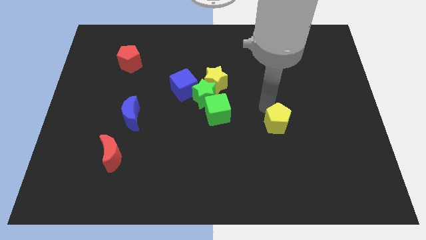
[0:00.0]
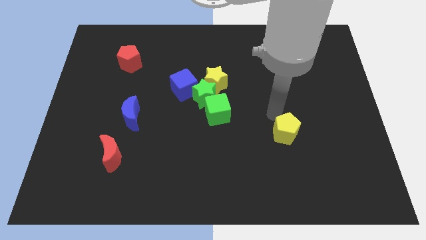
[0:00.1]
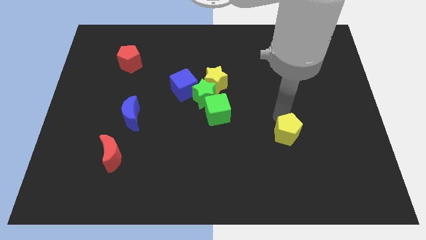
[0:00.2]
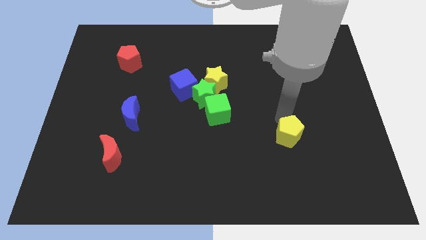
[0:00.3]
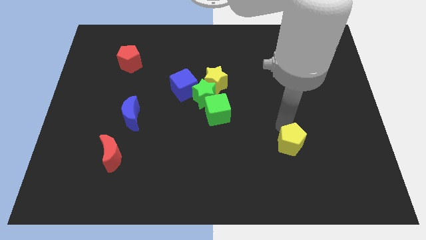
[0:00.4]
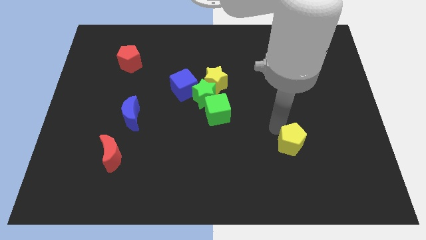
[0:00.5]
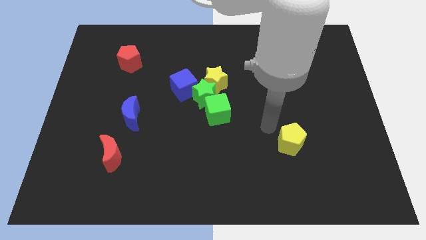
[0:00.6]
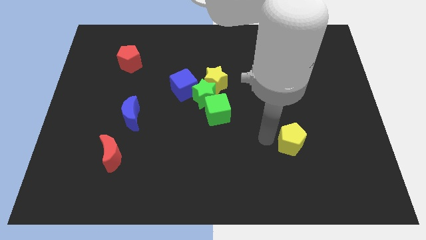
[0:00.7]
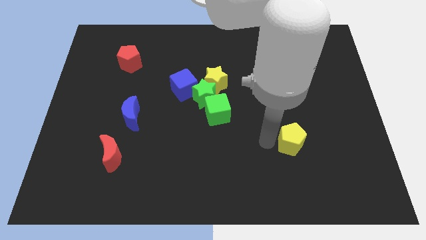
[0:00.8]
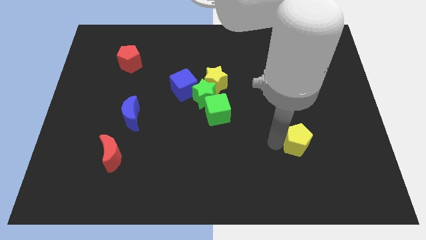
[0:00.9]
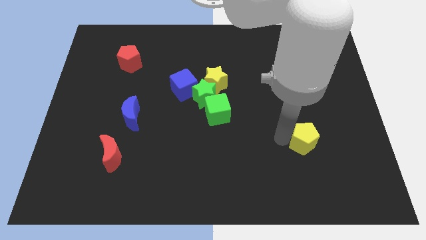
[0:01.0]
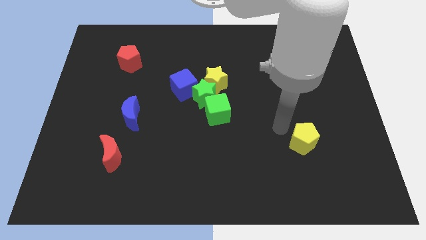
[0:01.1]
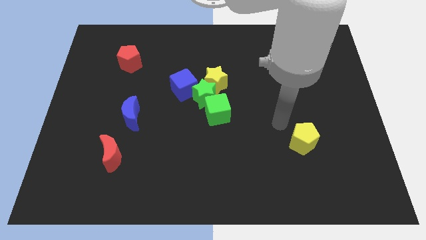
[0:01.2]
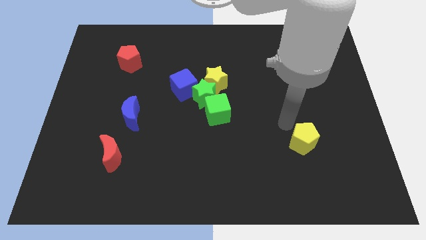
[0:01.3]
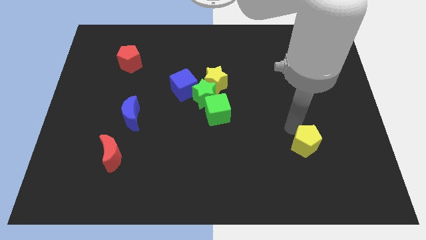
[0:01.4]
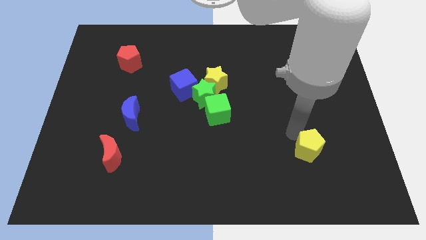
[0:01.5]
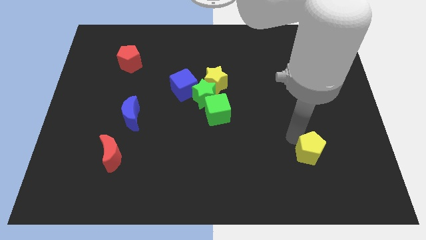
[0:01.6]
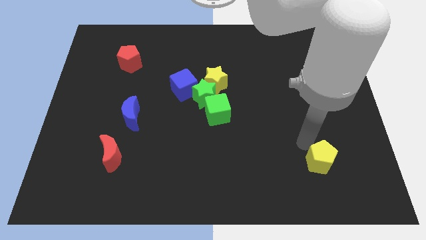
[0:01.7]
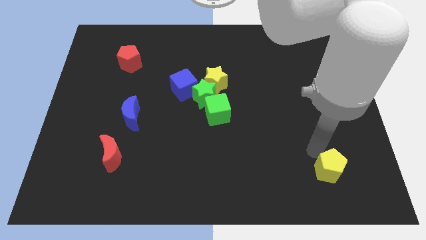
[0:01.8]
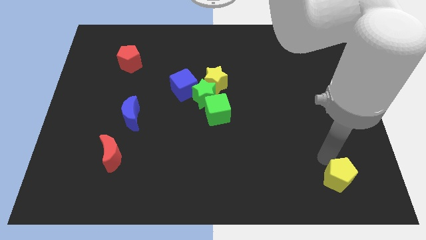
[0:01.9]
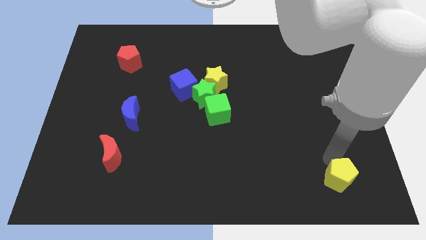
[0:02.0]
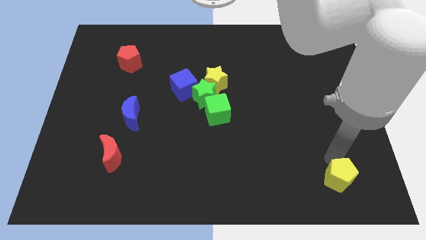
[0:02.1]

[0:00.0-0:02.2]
push the yellow pentagon to the bottom right side of the board

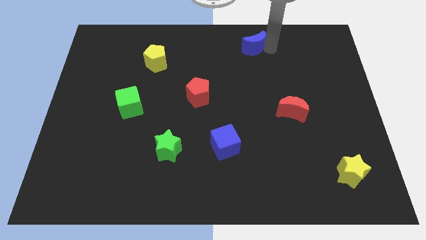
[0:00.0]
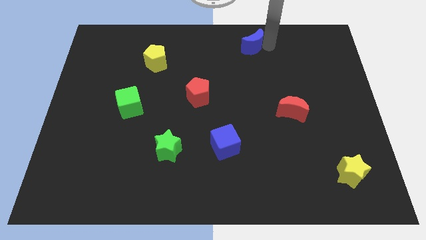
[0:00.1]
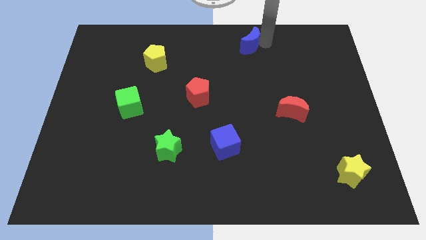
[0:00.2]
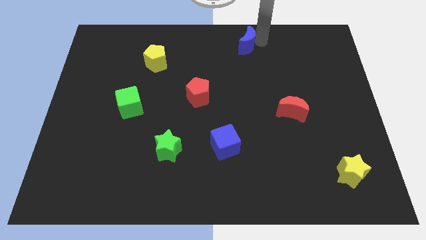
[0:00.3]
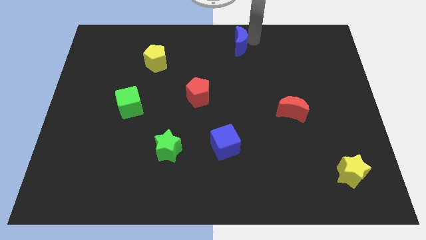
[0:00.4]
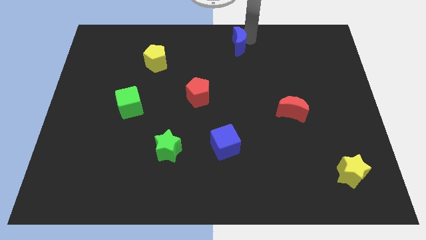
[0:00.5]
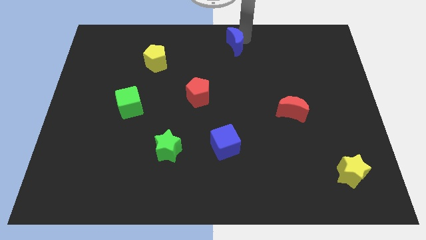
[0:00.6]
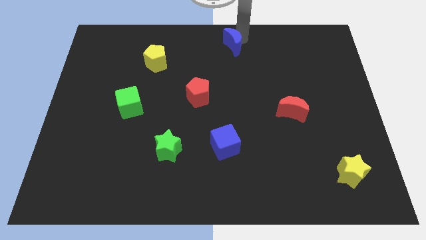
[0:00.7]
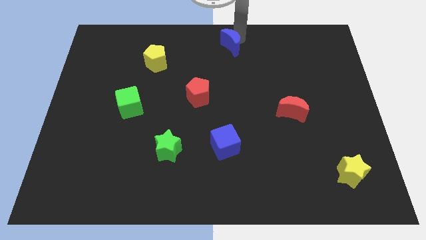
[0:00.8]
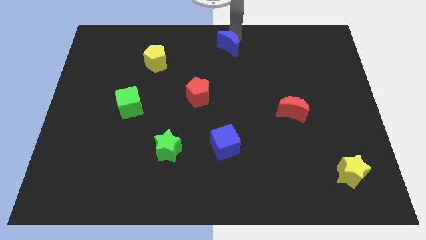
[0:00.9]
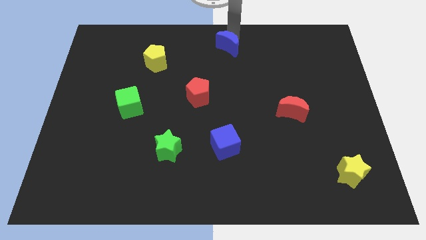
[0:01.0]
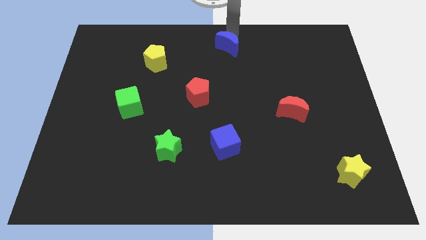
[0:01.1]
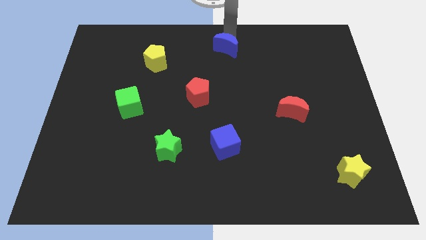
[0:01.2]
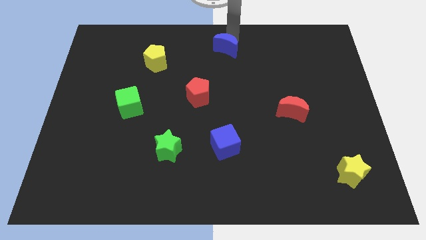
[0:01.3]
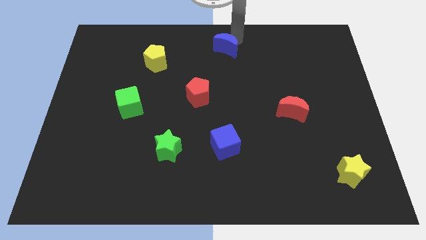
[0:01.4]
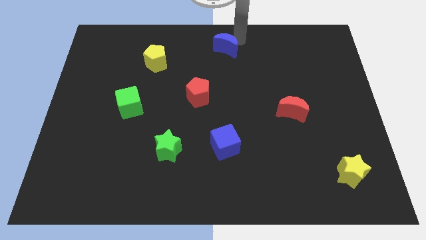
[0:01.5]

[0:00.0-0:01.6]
turn the blue moon towards the red pentagon

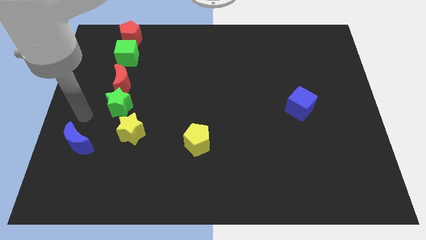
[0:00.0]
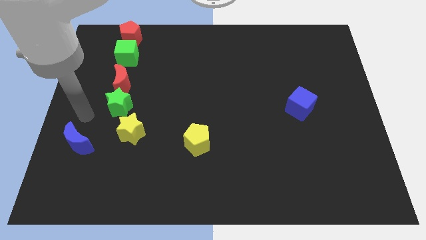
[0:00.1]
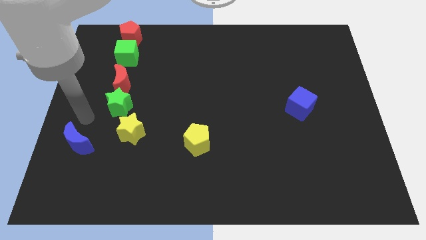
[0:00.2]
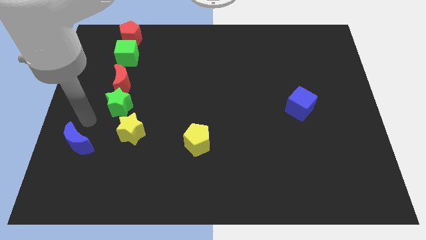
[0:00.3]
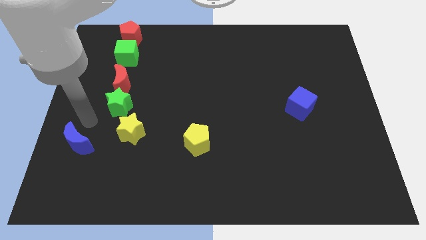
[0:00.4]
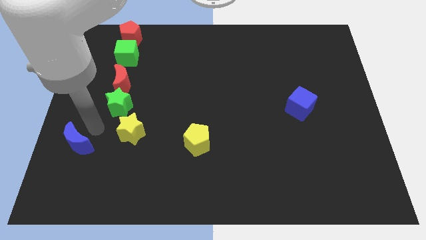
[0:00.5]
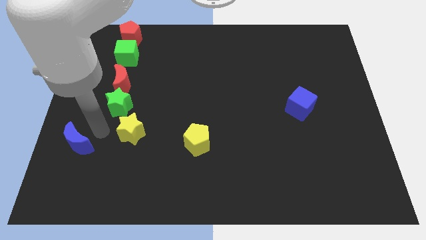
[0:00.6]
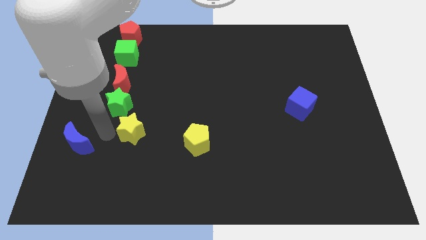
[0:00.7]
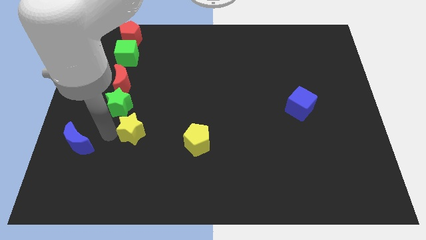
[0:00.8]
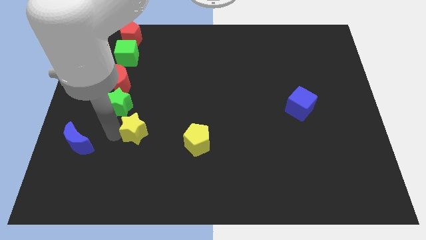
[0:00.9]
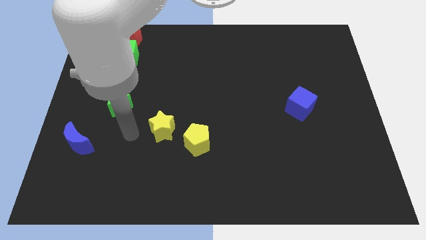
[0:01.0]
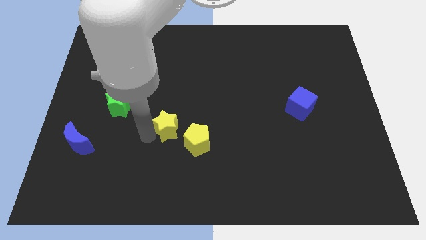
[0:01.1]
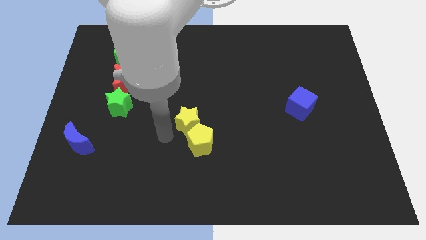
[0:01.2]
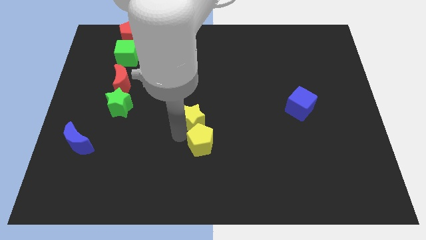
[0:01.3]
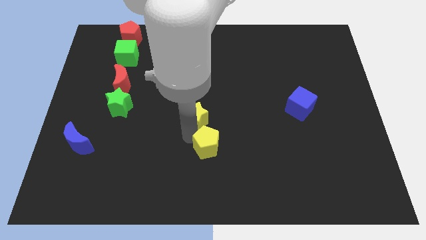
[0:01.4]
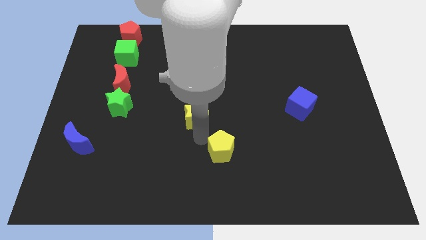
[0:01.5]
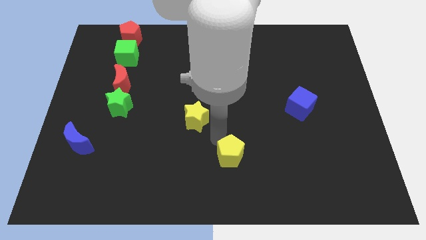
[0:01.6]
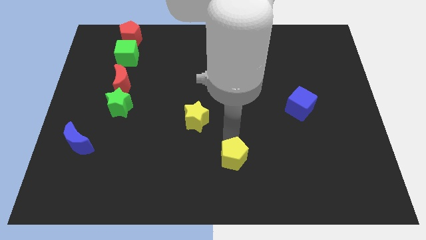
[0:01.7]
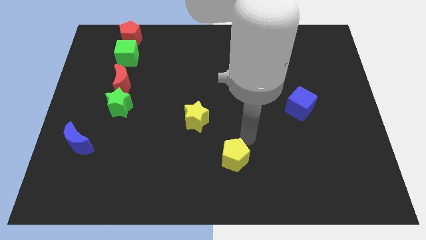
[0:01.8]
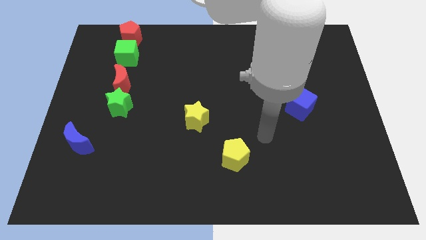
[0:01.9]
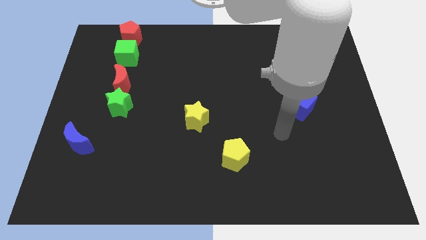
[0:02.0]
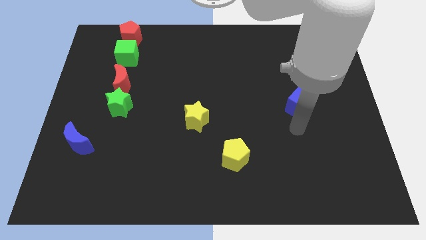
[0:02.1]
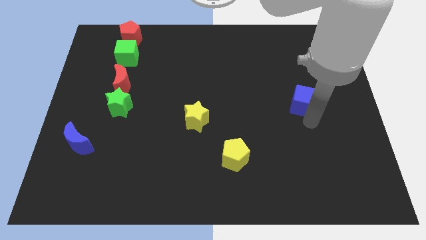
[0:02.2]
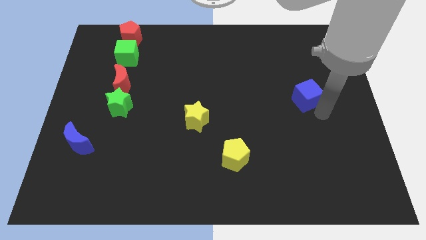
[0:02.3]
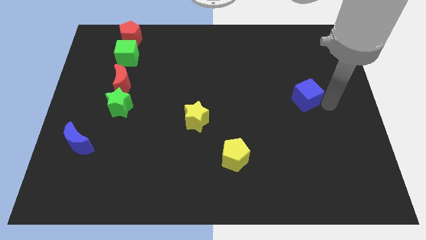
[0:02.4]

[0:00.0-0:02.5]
move yellow star above the yellow pentagon

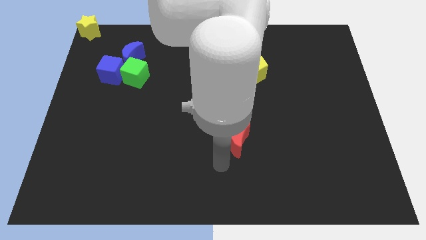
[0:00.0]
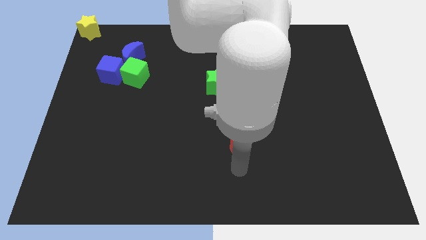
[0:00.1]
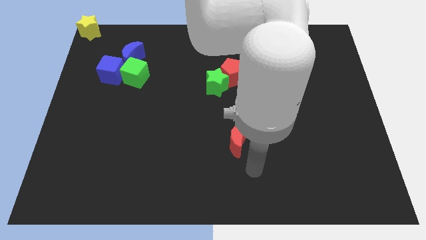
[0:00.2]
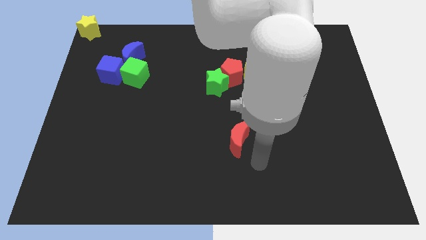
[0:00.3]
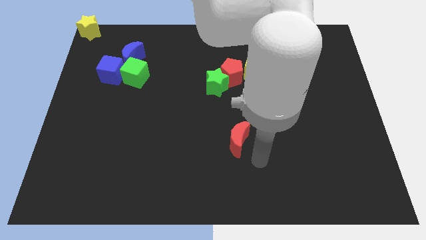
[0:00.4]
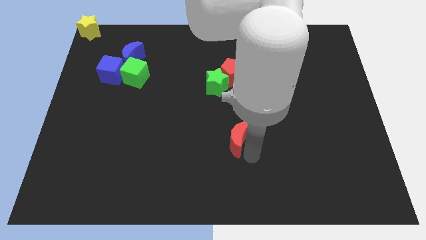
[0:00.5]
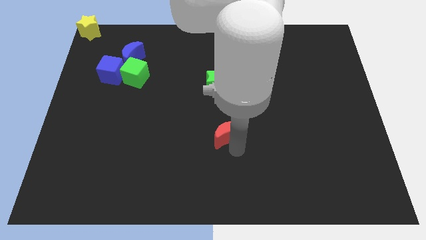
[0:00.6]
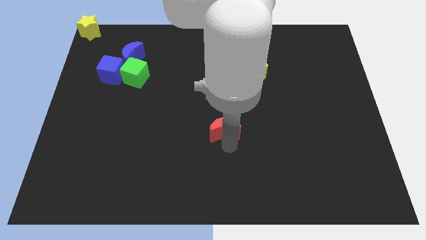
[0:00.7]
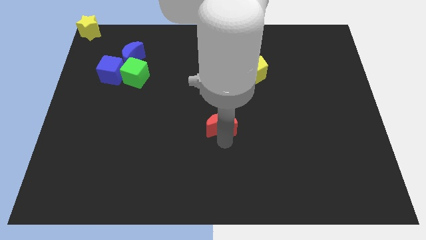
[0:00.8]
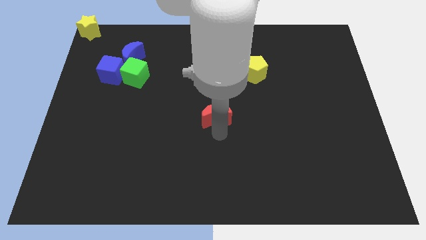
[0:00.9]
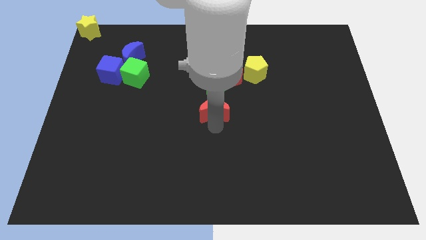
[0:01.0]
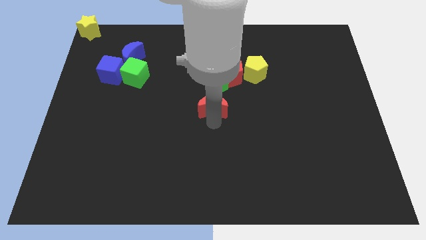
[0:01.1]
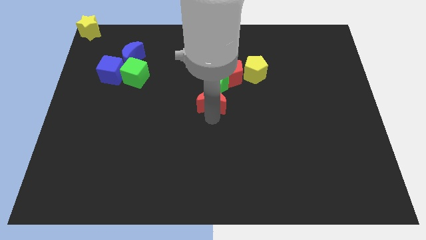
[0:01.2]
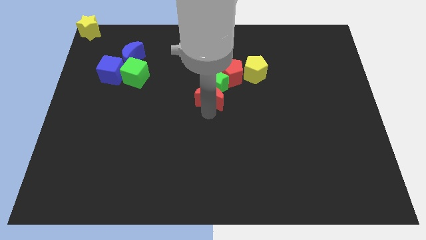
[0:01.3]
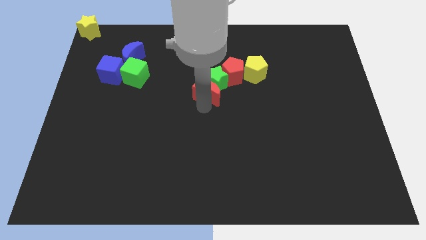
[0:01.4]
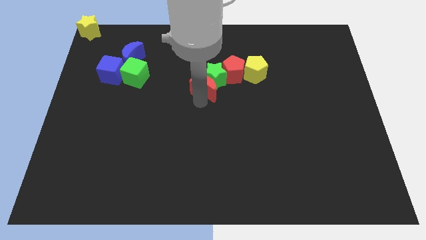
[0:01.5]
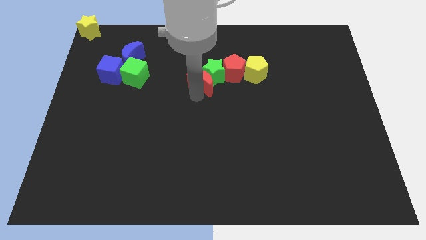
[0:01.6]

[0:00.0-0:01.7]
push the red moon into the green star

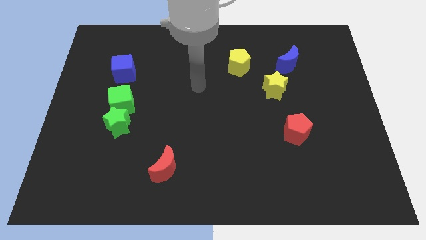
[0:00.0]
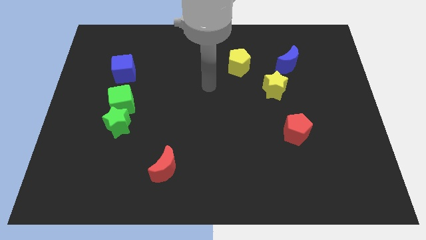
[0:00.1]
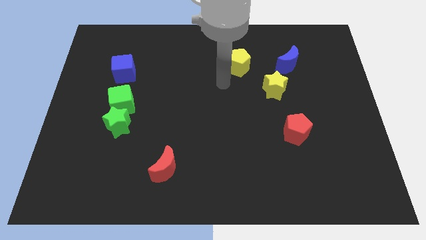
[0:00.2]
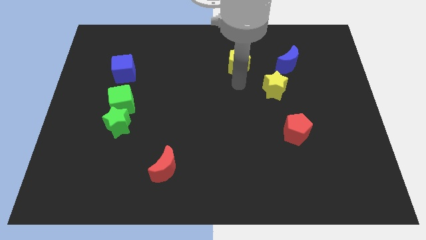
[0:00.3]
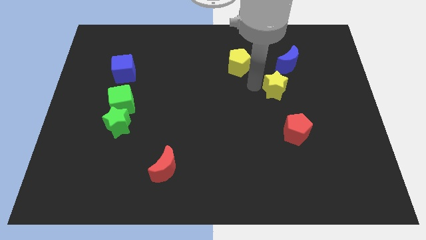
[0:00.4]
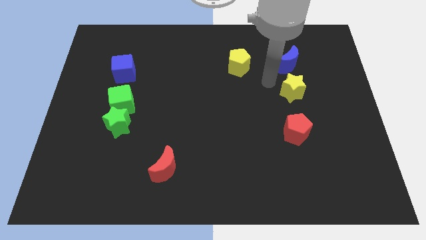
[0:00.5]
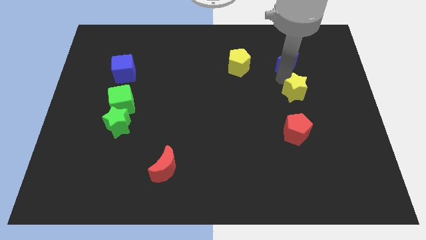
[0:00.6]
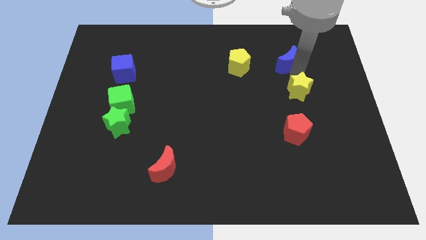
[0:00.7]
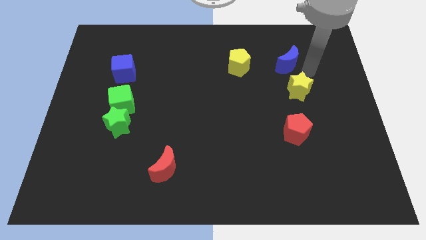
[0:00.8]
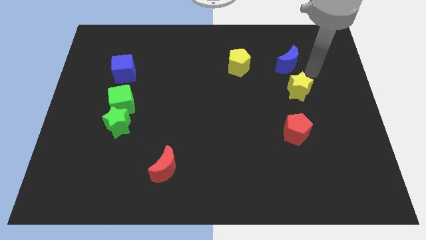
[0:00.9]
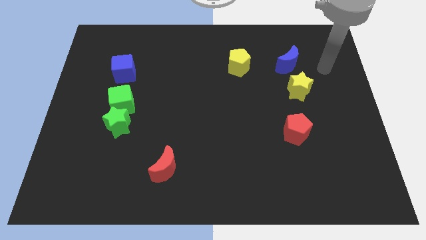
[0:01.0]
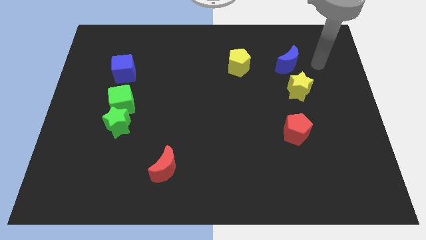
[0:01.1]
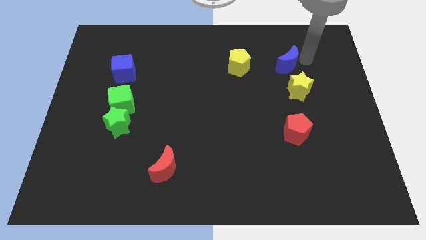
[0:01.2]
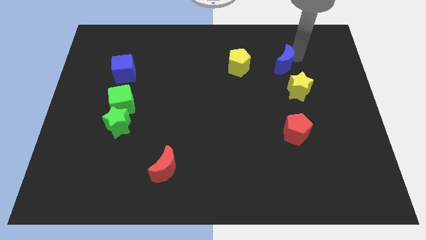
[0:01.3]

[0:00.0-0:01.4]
move the yellow star to the right center of the board
